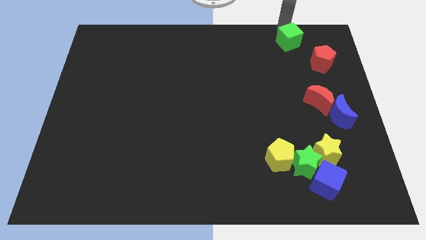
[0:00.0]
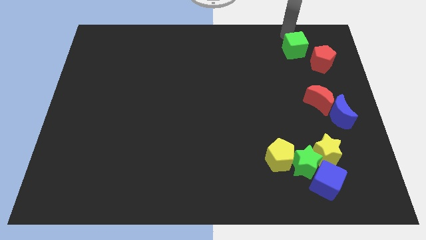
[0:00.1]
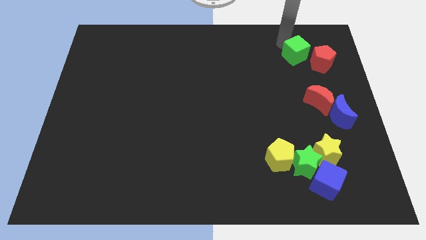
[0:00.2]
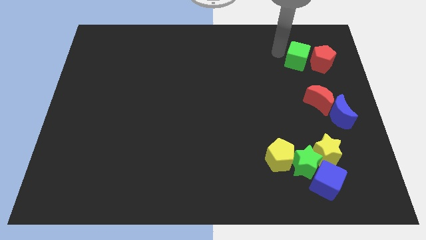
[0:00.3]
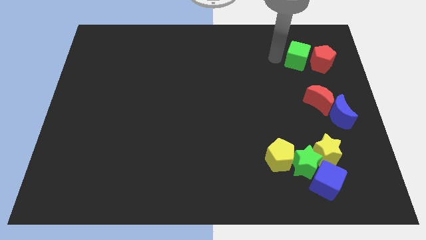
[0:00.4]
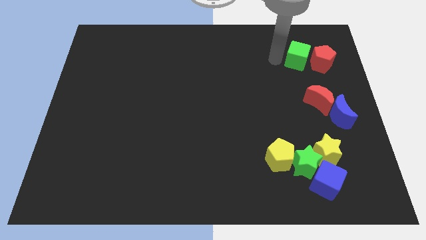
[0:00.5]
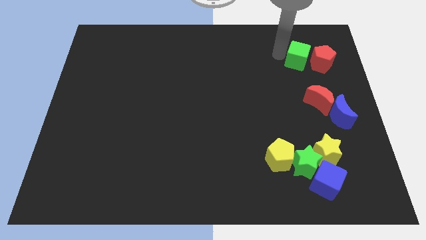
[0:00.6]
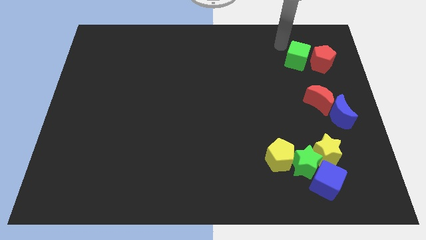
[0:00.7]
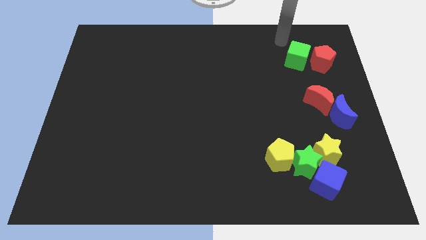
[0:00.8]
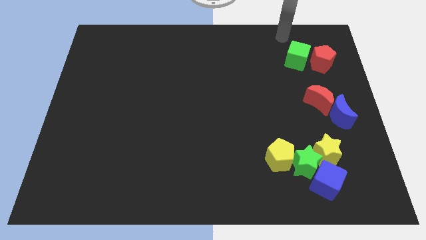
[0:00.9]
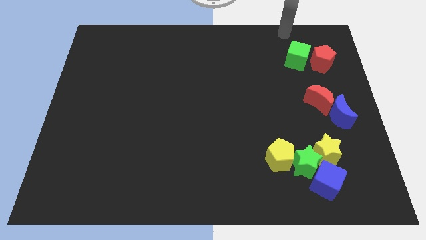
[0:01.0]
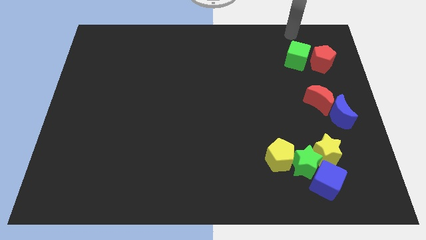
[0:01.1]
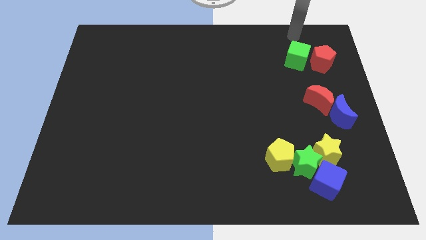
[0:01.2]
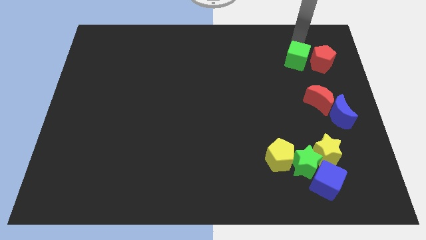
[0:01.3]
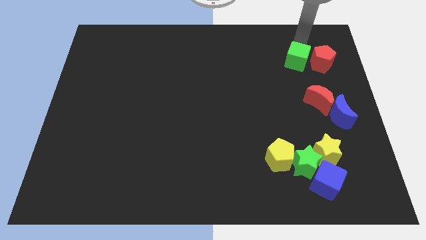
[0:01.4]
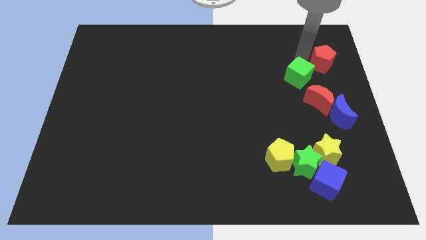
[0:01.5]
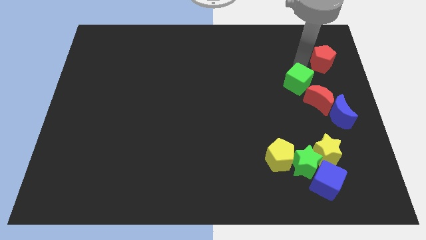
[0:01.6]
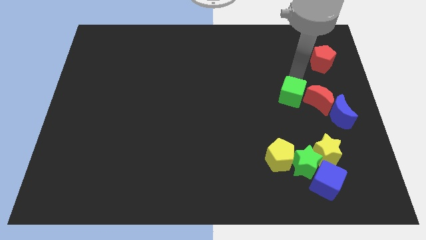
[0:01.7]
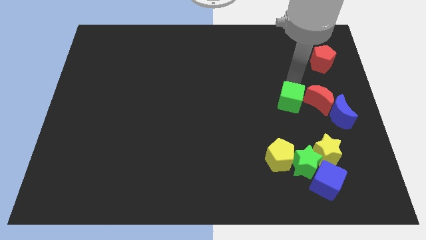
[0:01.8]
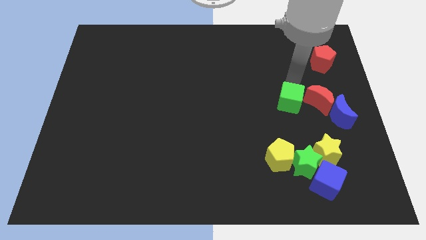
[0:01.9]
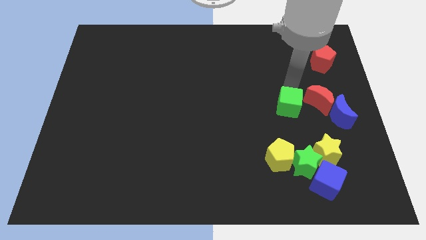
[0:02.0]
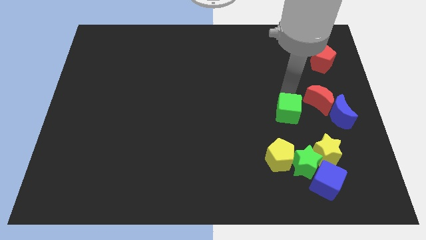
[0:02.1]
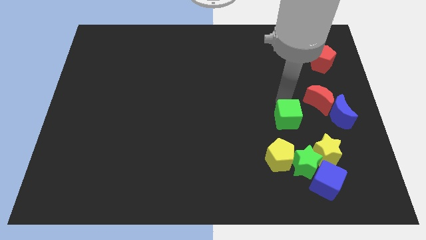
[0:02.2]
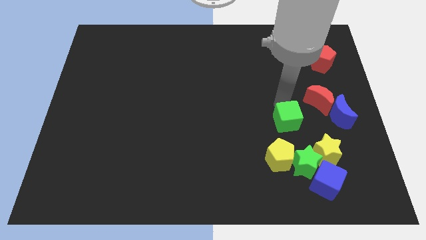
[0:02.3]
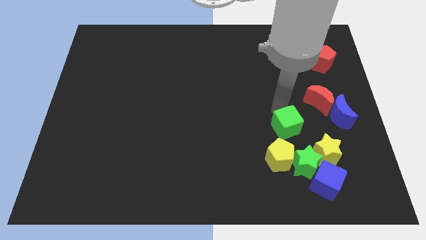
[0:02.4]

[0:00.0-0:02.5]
move the green cube above the yellow pentagon

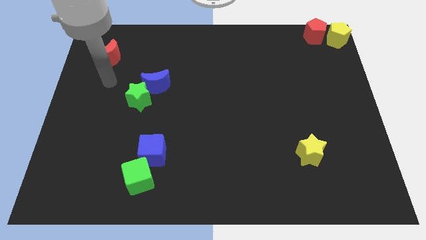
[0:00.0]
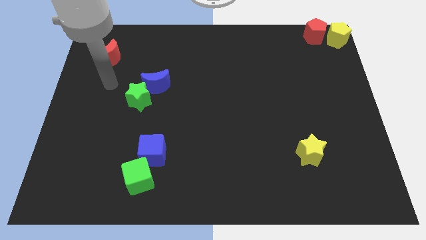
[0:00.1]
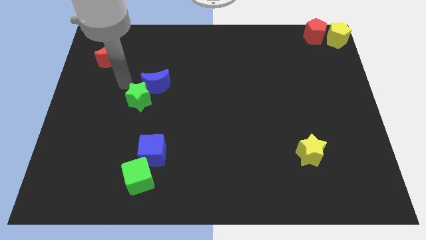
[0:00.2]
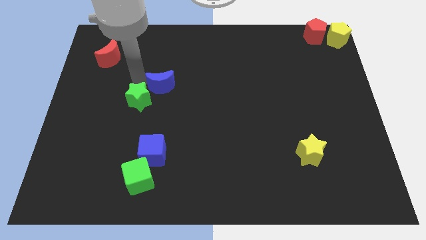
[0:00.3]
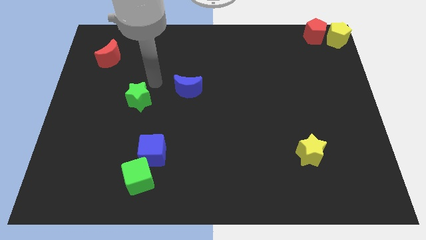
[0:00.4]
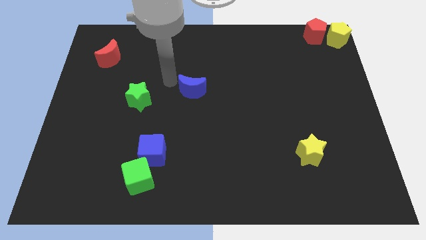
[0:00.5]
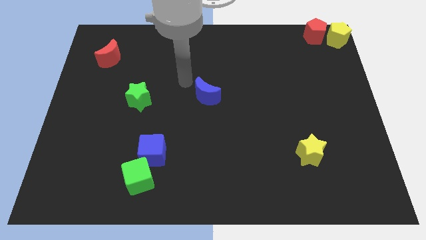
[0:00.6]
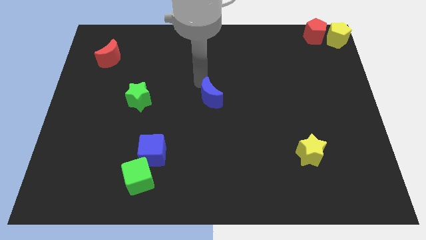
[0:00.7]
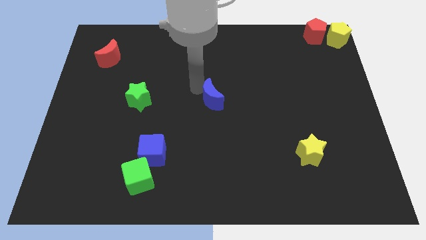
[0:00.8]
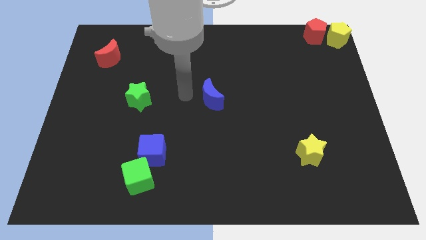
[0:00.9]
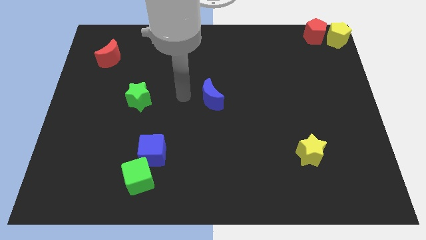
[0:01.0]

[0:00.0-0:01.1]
separate the blue crescent from the green star

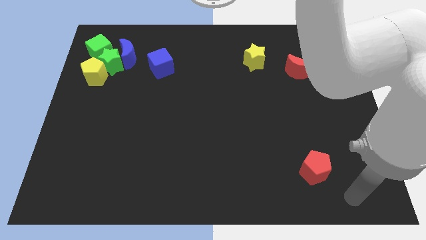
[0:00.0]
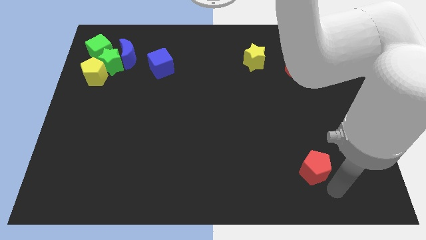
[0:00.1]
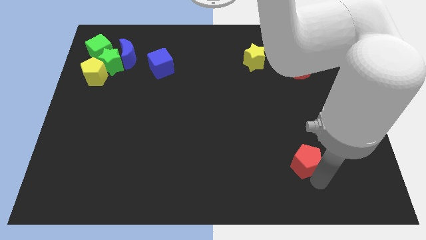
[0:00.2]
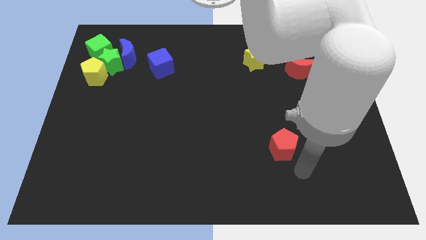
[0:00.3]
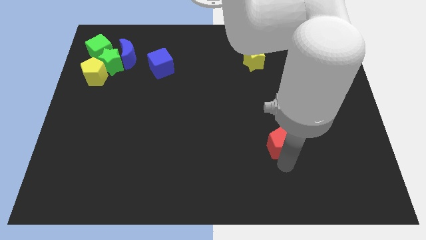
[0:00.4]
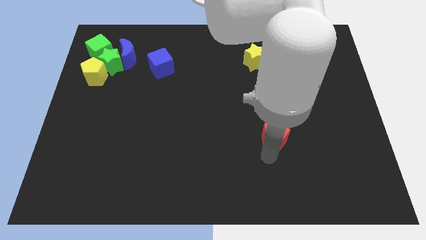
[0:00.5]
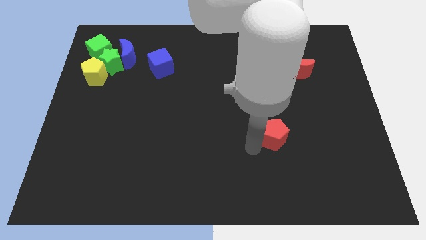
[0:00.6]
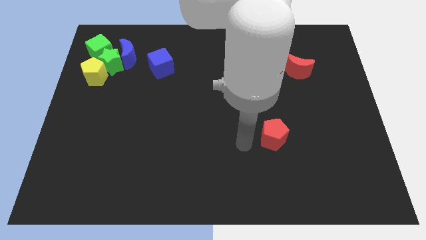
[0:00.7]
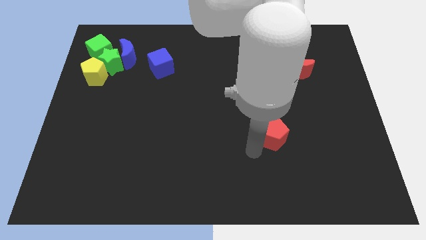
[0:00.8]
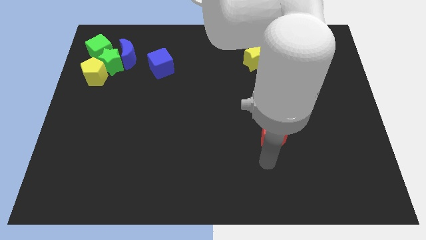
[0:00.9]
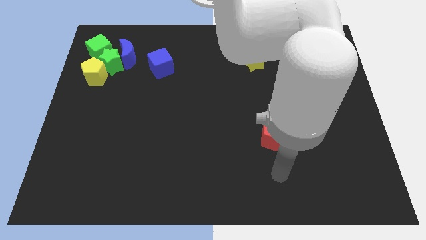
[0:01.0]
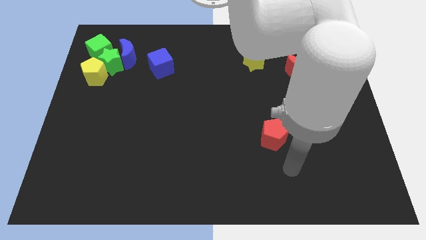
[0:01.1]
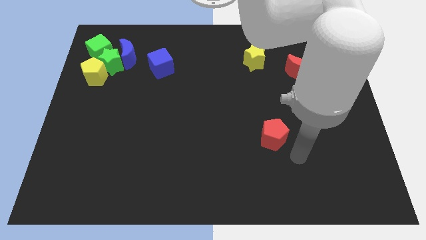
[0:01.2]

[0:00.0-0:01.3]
push the red pentagon to the top of the board

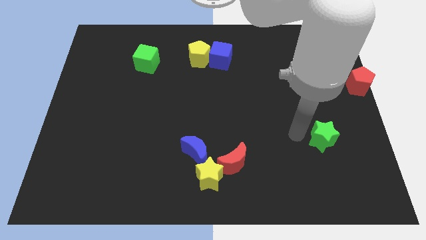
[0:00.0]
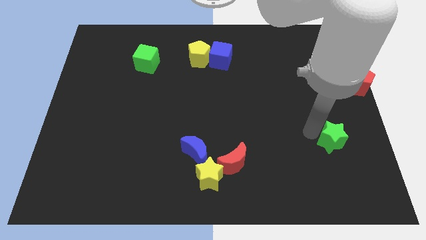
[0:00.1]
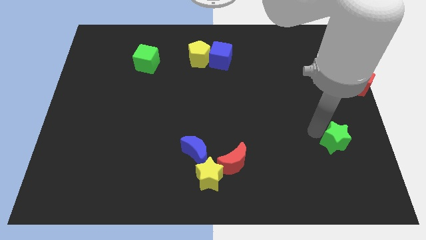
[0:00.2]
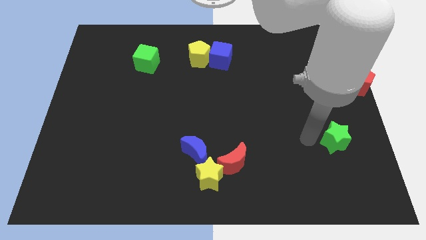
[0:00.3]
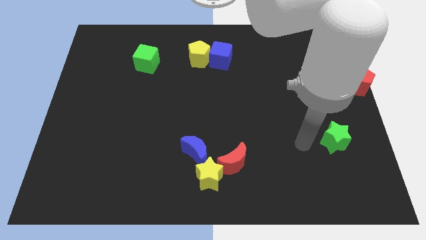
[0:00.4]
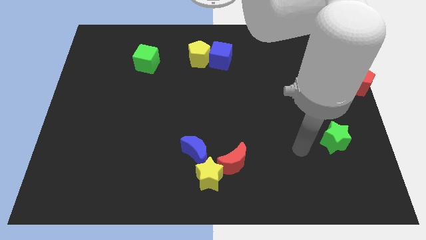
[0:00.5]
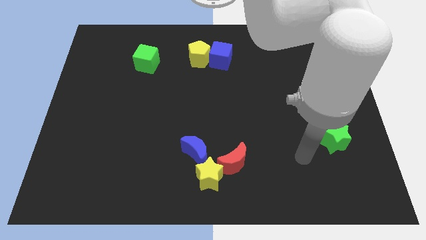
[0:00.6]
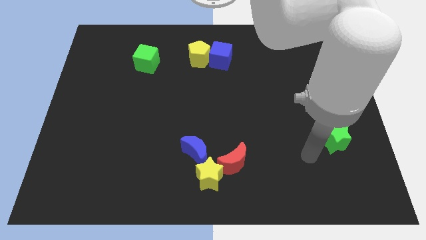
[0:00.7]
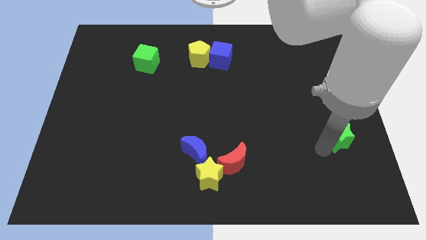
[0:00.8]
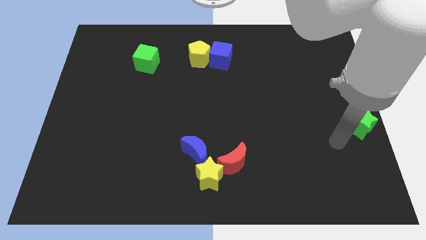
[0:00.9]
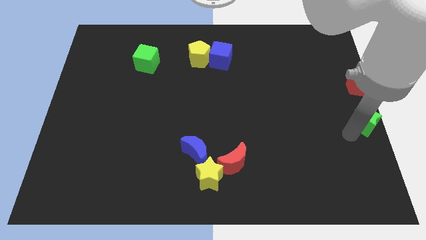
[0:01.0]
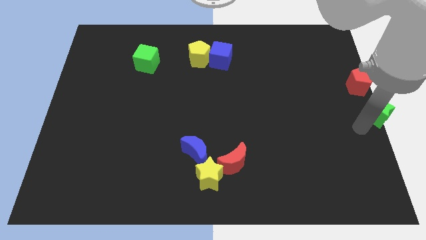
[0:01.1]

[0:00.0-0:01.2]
move the green star below red pentagon

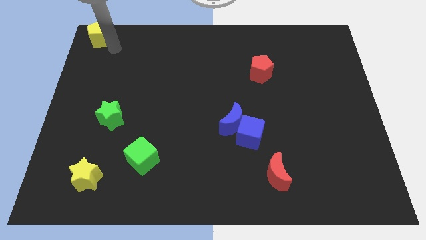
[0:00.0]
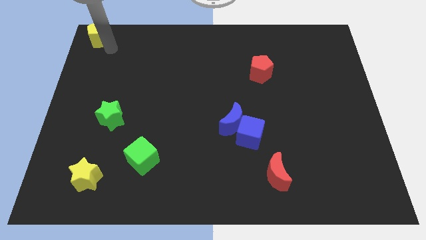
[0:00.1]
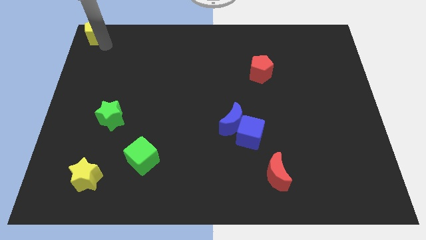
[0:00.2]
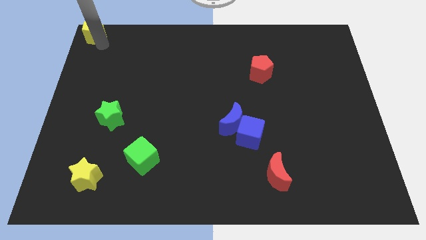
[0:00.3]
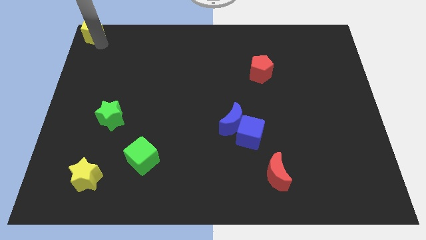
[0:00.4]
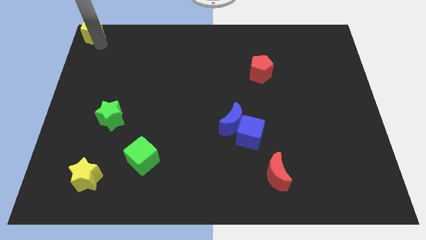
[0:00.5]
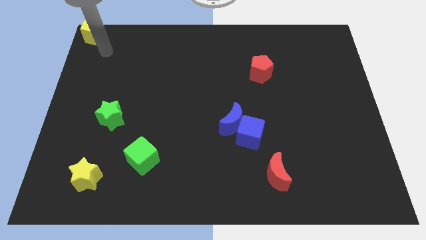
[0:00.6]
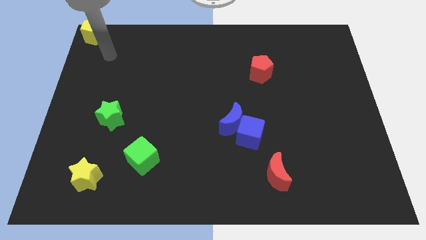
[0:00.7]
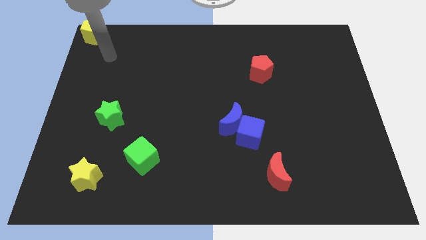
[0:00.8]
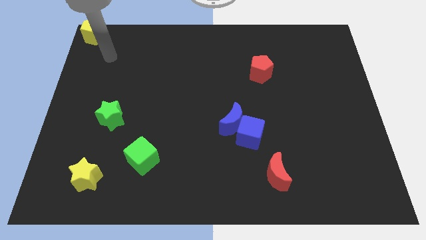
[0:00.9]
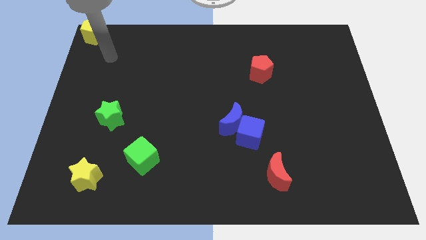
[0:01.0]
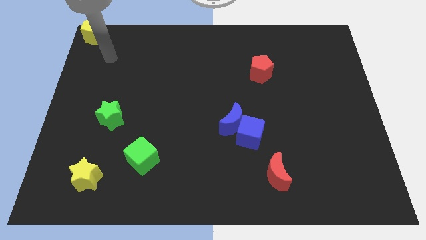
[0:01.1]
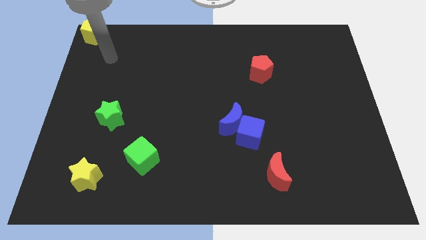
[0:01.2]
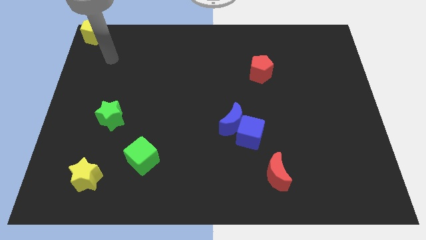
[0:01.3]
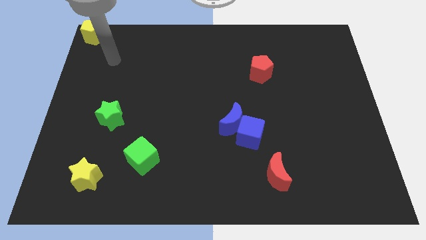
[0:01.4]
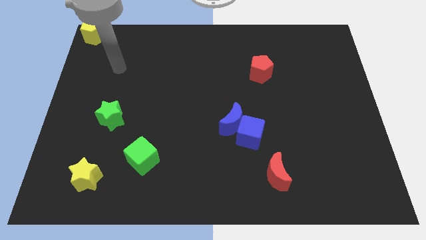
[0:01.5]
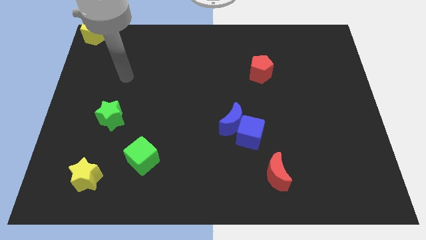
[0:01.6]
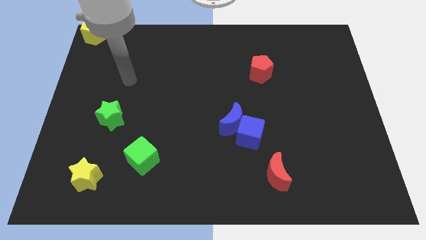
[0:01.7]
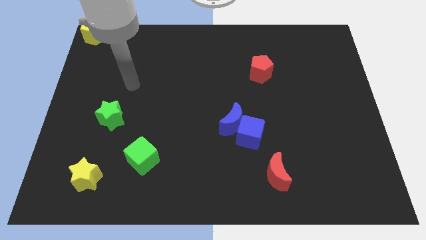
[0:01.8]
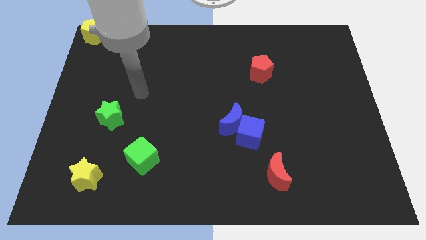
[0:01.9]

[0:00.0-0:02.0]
place your arm above the green cube

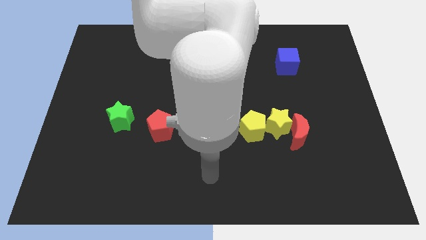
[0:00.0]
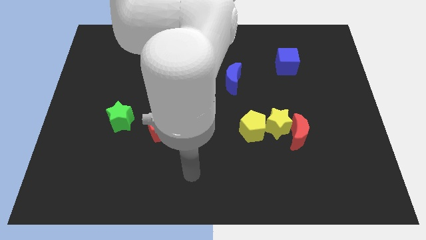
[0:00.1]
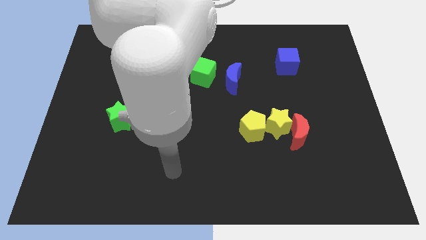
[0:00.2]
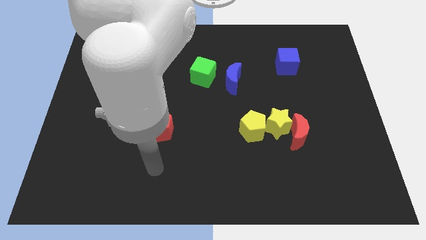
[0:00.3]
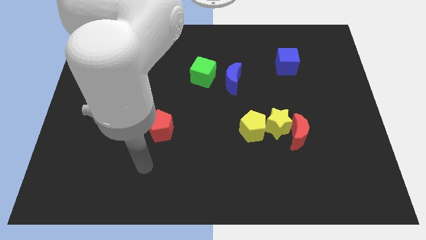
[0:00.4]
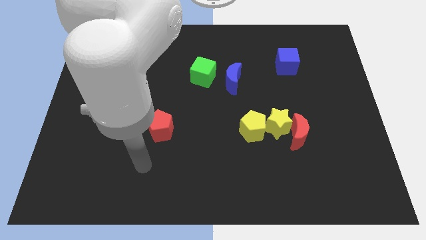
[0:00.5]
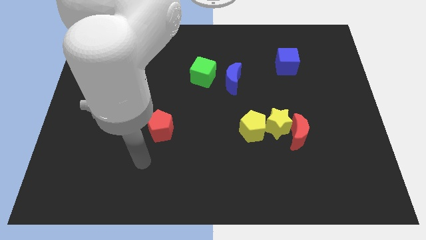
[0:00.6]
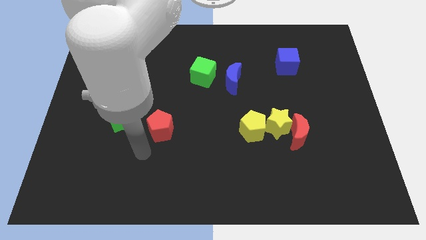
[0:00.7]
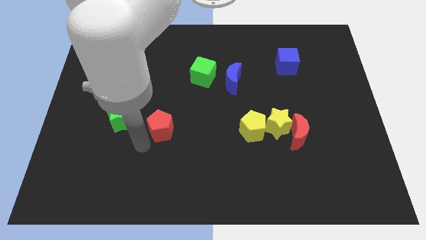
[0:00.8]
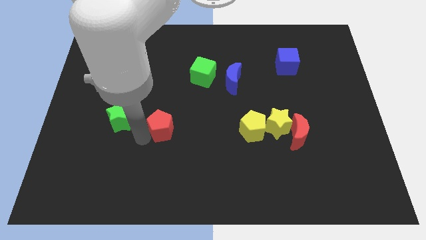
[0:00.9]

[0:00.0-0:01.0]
place the arm left to the red pentagon
